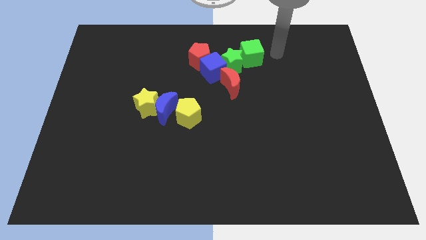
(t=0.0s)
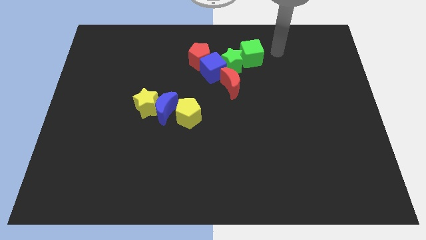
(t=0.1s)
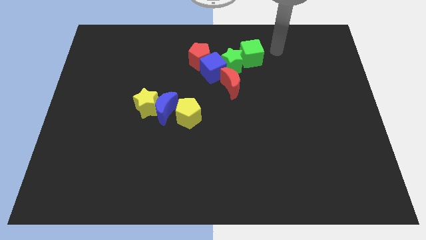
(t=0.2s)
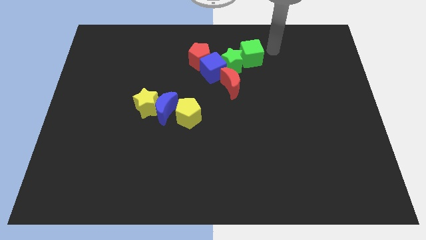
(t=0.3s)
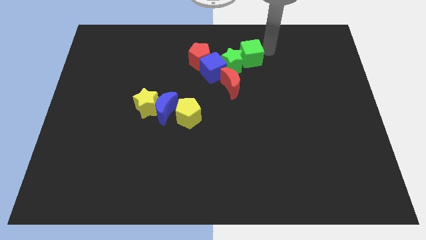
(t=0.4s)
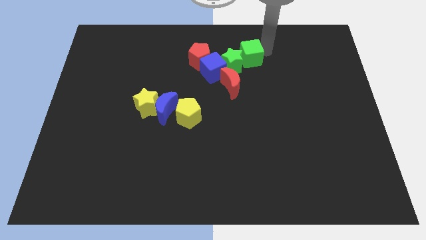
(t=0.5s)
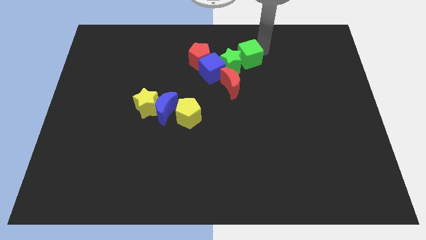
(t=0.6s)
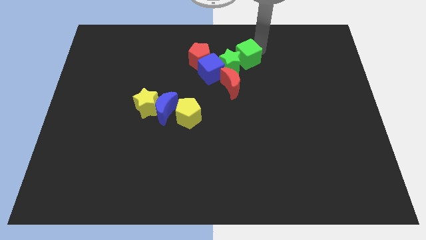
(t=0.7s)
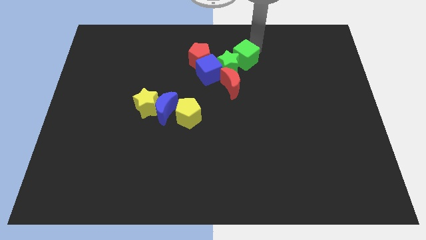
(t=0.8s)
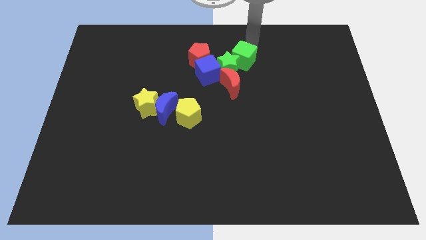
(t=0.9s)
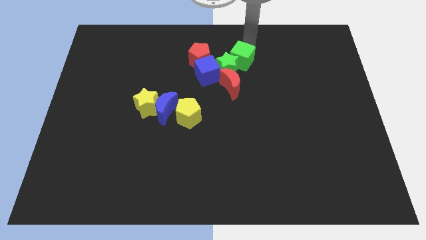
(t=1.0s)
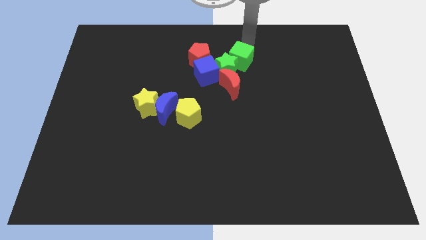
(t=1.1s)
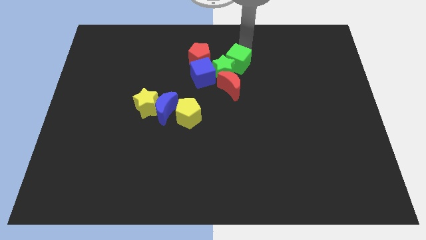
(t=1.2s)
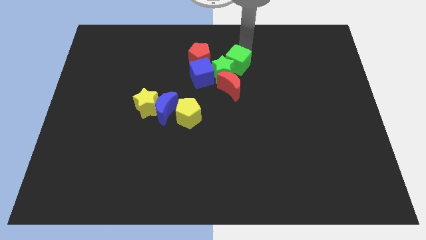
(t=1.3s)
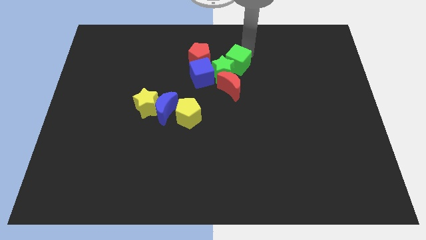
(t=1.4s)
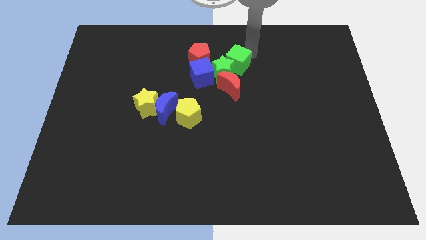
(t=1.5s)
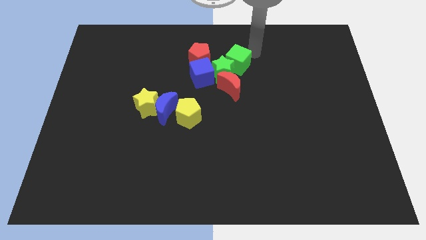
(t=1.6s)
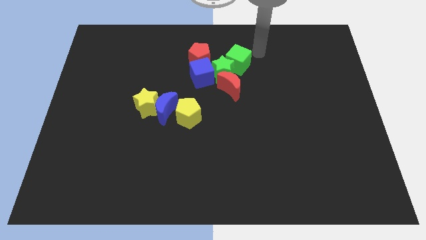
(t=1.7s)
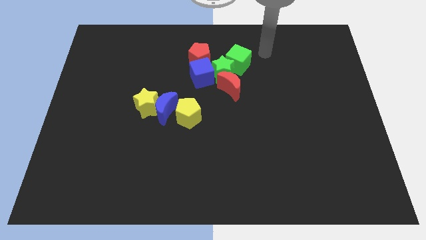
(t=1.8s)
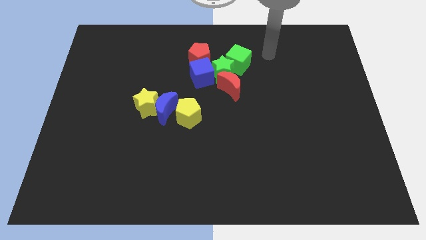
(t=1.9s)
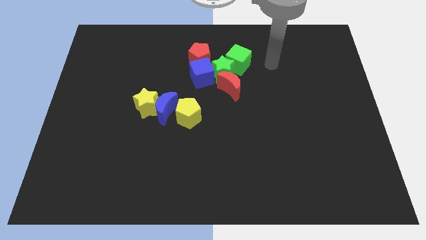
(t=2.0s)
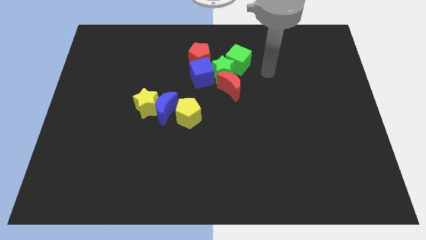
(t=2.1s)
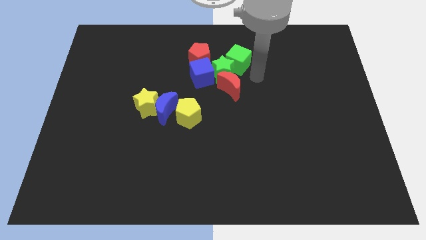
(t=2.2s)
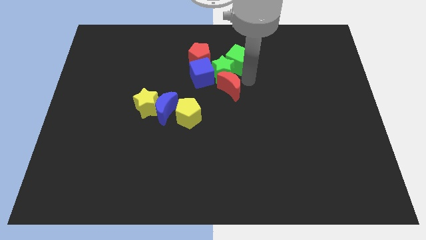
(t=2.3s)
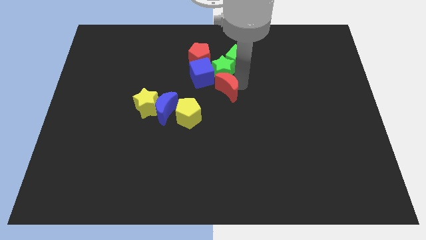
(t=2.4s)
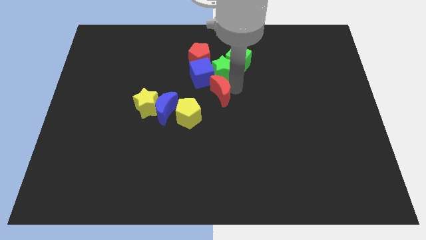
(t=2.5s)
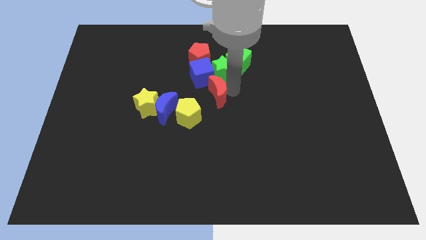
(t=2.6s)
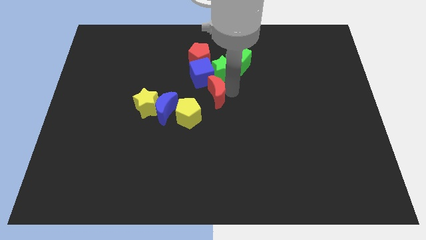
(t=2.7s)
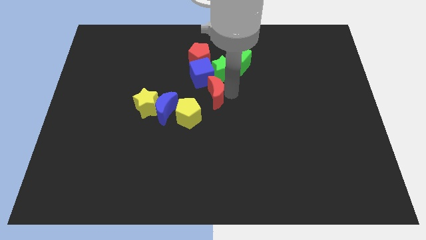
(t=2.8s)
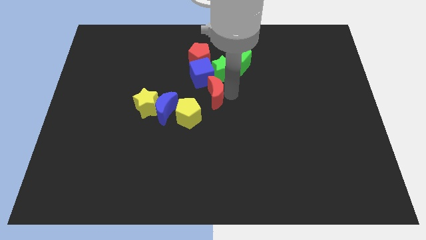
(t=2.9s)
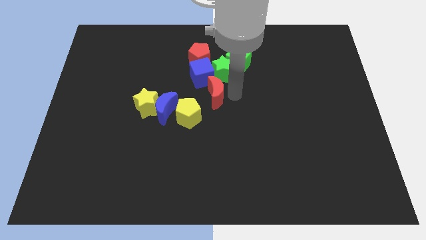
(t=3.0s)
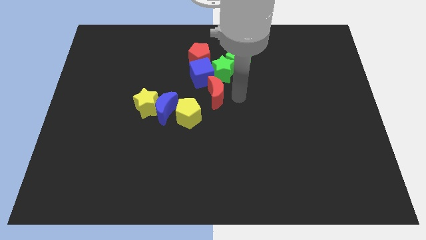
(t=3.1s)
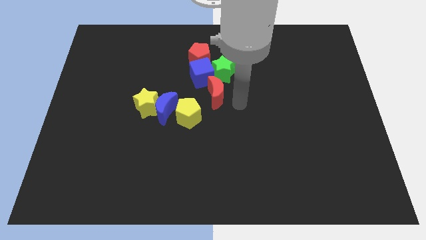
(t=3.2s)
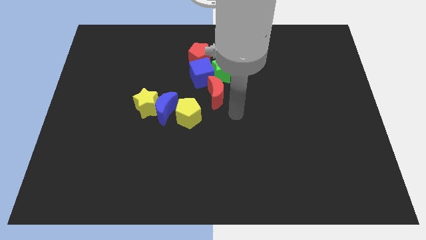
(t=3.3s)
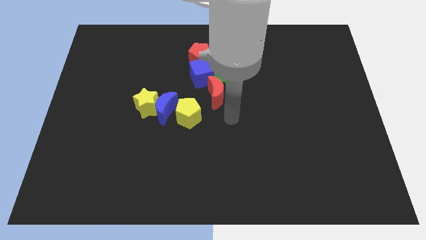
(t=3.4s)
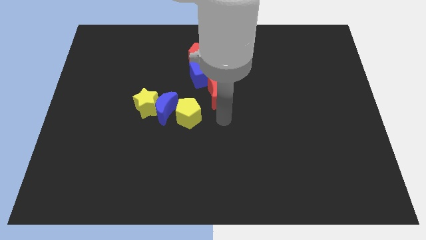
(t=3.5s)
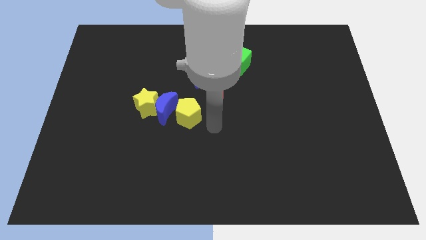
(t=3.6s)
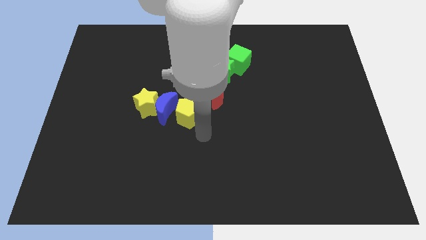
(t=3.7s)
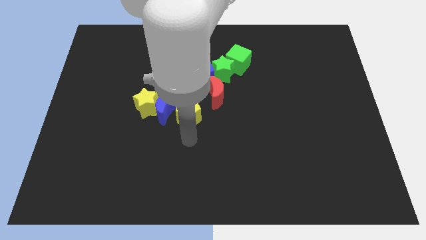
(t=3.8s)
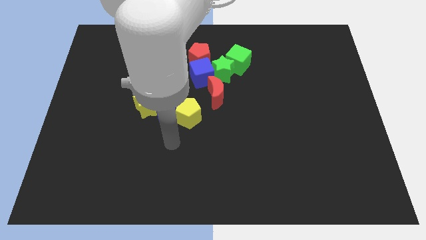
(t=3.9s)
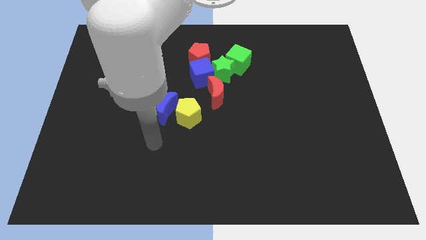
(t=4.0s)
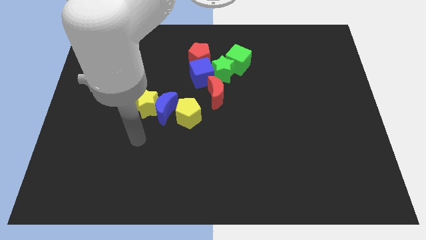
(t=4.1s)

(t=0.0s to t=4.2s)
slightly move the red moon to the bottom of the blue cube

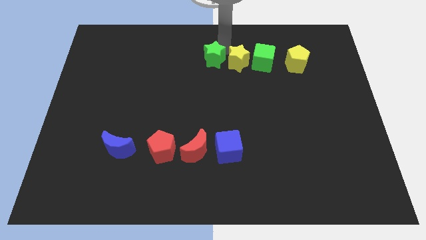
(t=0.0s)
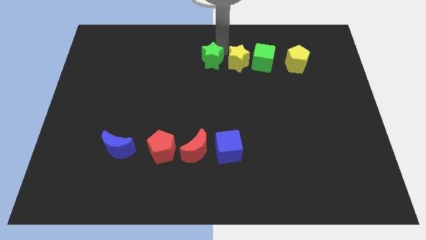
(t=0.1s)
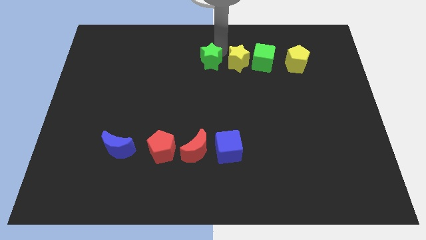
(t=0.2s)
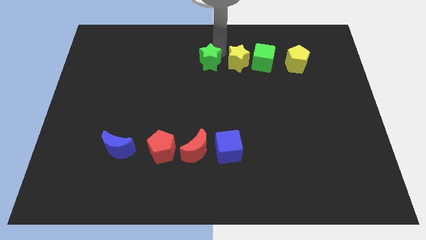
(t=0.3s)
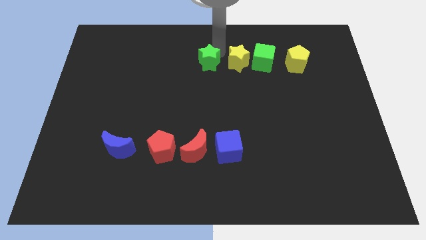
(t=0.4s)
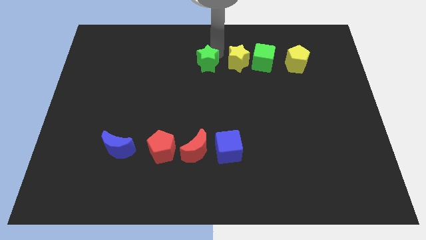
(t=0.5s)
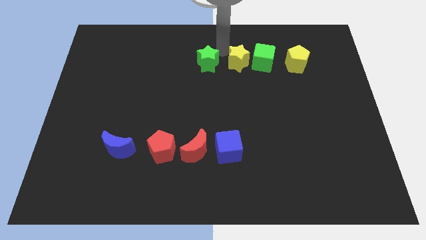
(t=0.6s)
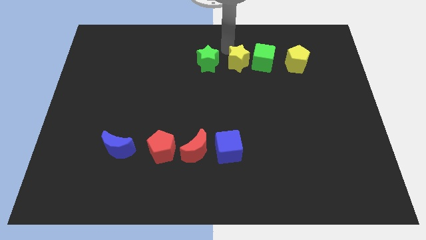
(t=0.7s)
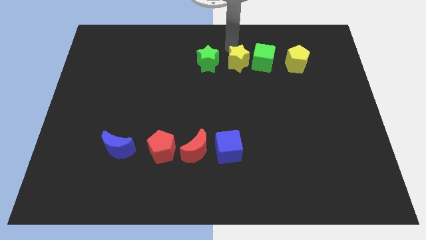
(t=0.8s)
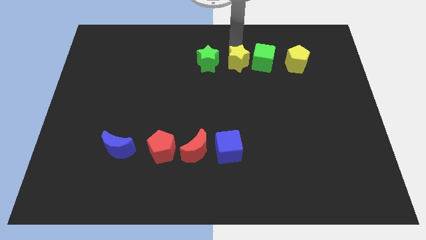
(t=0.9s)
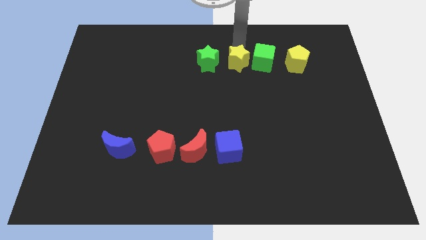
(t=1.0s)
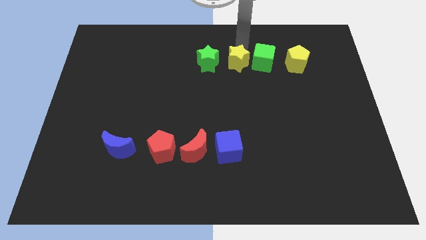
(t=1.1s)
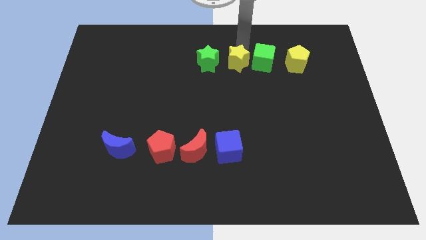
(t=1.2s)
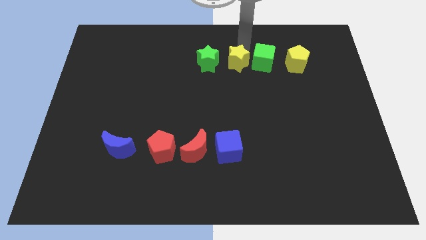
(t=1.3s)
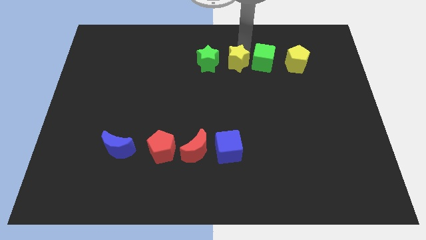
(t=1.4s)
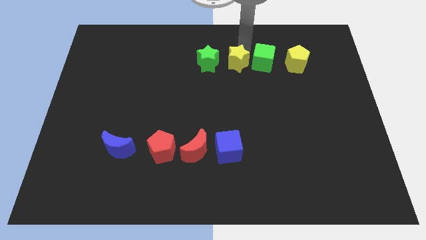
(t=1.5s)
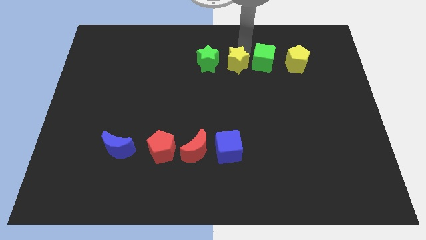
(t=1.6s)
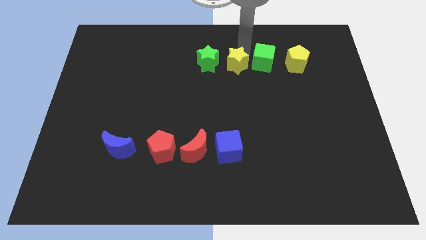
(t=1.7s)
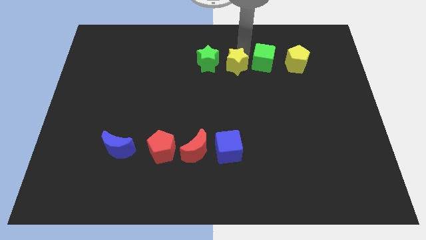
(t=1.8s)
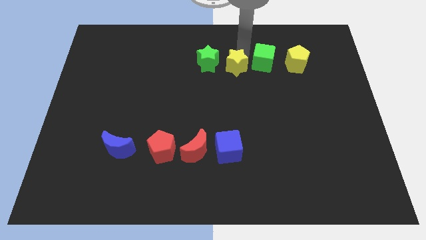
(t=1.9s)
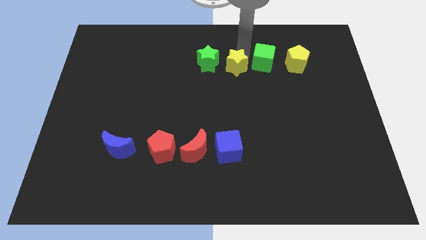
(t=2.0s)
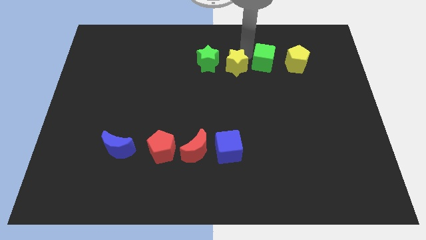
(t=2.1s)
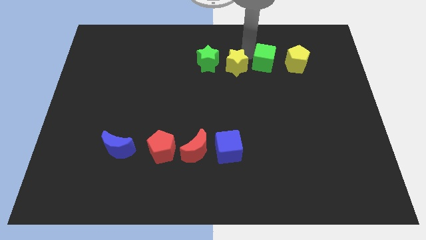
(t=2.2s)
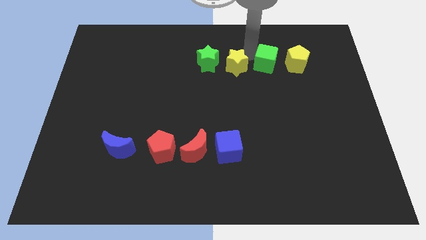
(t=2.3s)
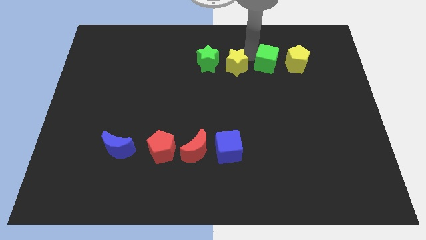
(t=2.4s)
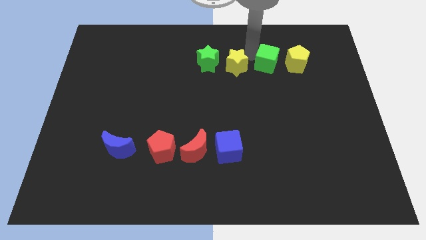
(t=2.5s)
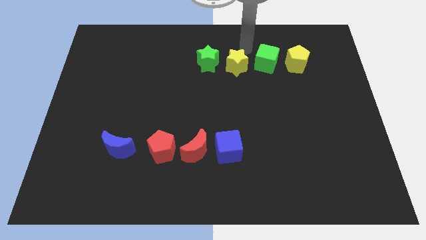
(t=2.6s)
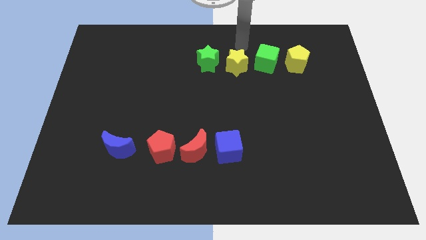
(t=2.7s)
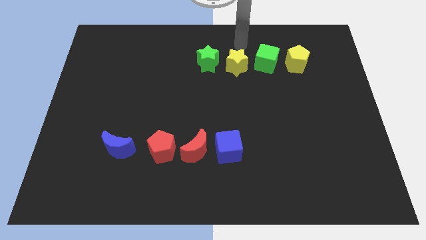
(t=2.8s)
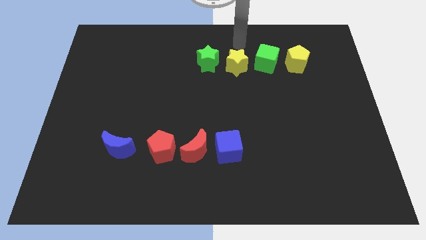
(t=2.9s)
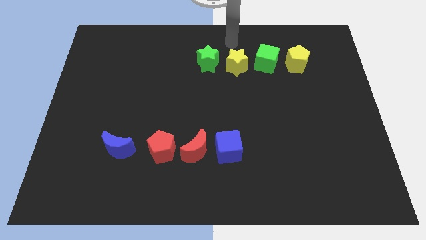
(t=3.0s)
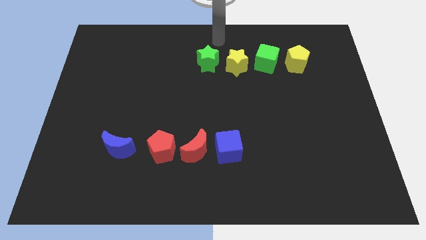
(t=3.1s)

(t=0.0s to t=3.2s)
adjust the green star yellow star and green cube at the left side of the yellow pentagon

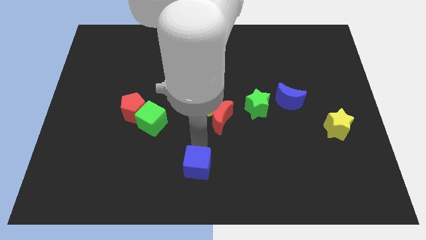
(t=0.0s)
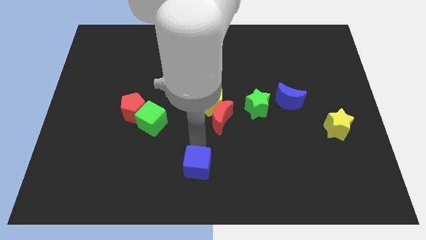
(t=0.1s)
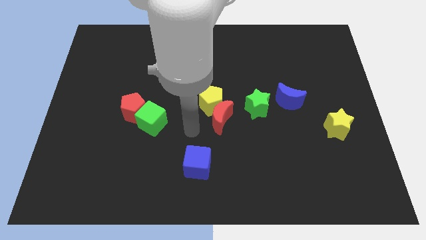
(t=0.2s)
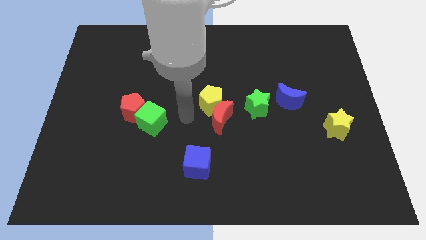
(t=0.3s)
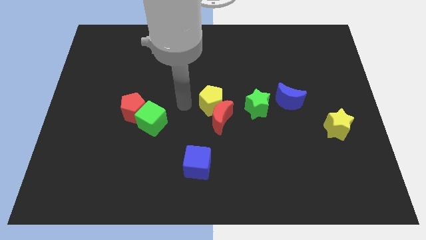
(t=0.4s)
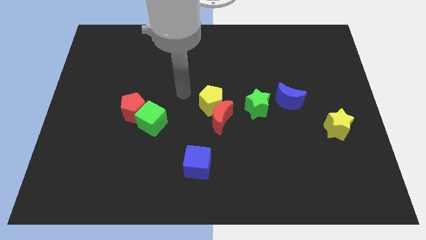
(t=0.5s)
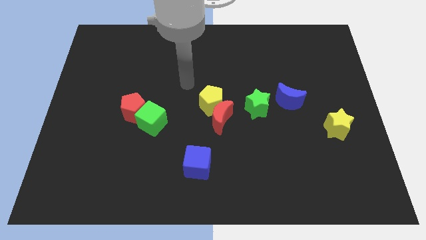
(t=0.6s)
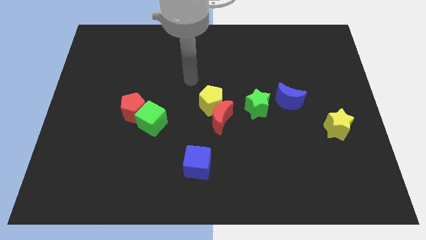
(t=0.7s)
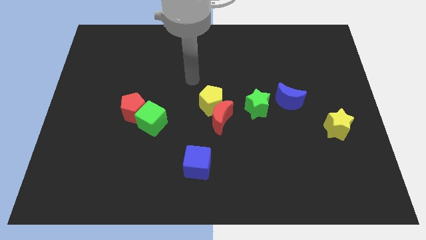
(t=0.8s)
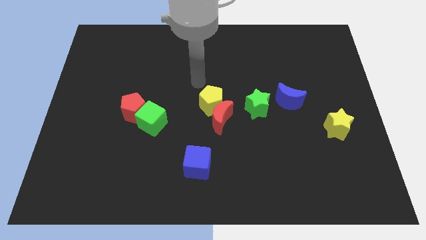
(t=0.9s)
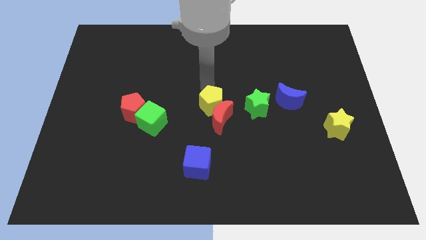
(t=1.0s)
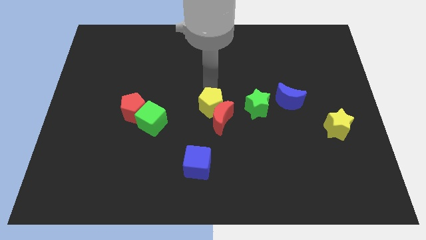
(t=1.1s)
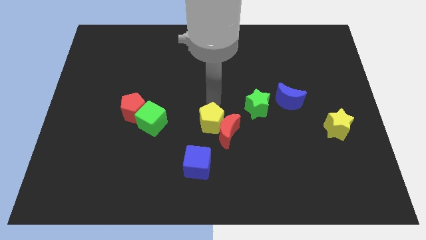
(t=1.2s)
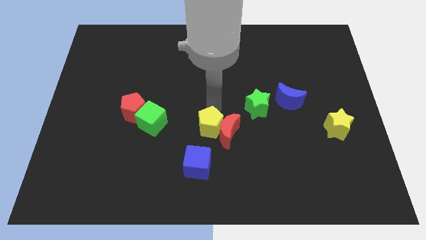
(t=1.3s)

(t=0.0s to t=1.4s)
move the arm away from the blue cube

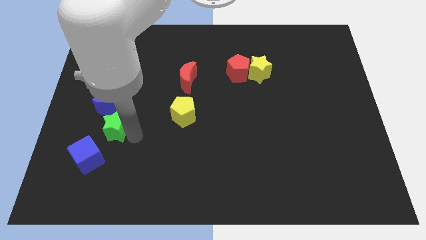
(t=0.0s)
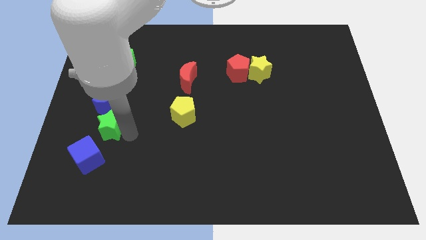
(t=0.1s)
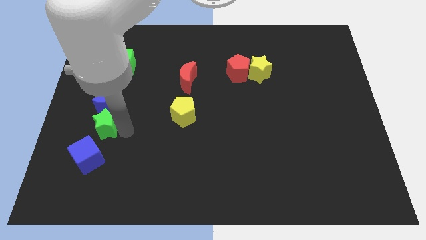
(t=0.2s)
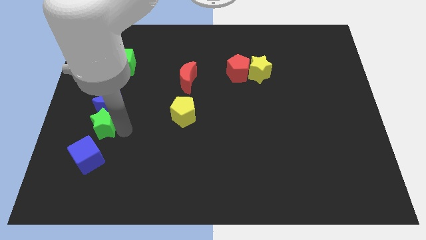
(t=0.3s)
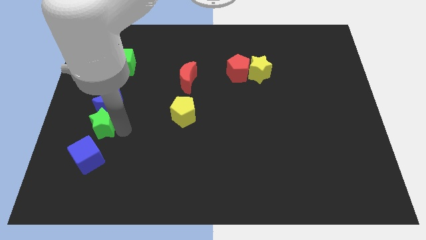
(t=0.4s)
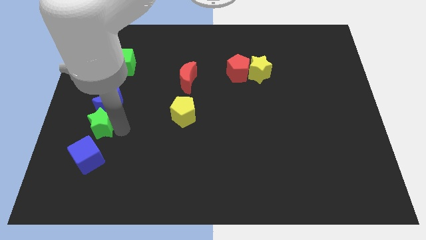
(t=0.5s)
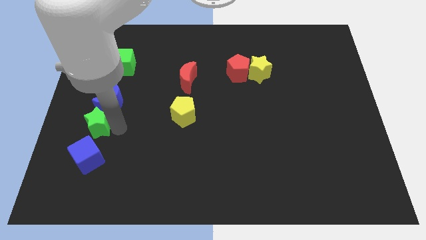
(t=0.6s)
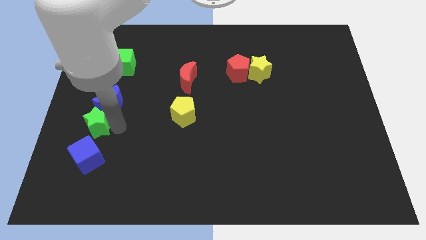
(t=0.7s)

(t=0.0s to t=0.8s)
place green star below blue crescent
